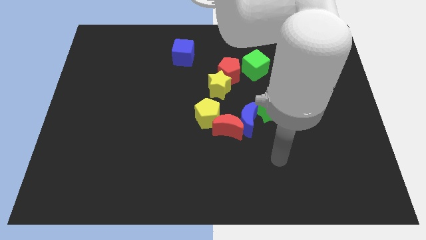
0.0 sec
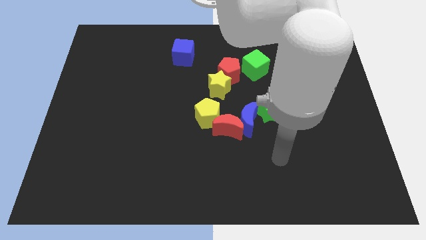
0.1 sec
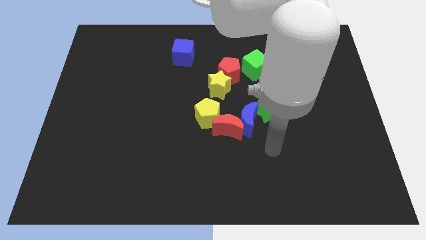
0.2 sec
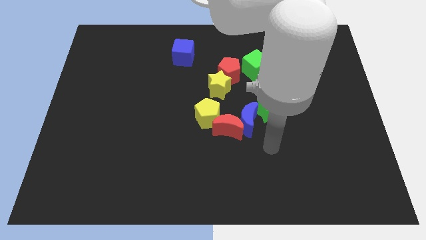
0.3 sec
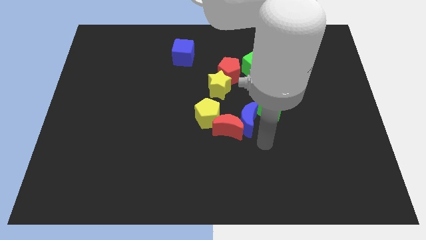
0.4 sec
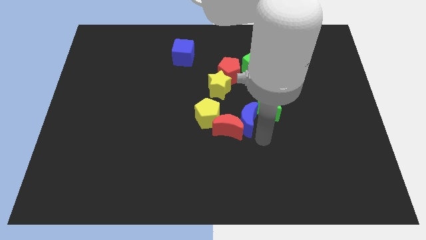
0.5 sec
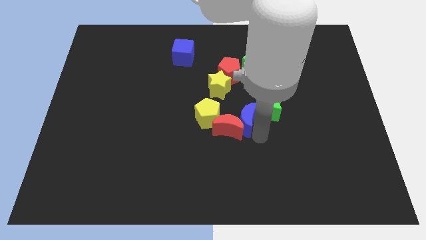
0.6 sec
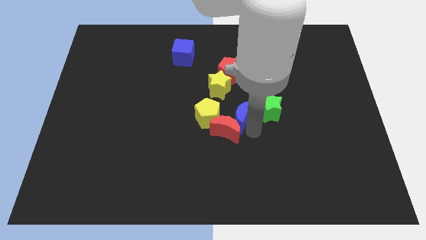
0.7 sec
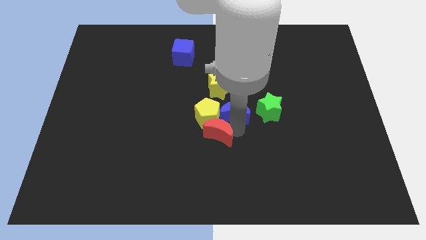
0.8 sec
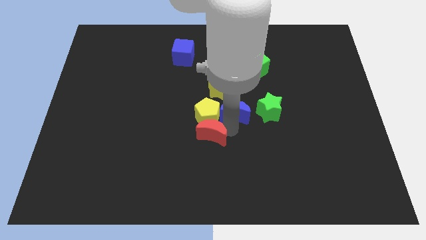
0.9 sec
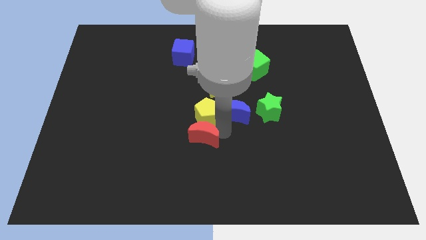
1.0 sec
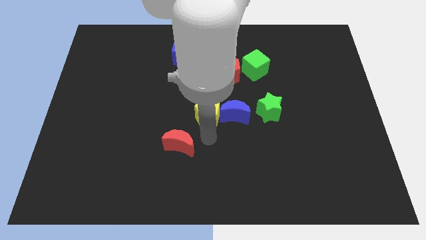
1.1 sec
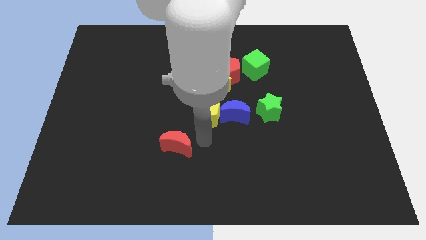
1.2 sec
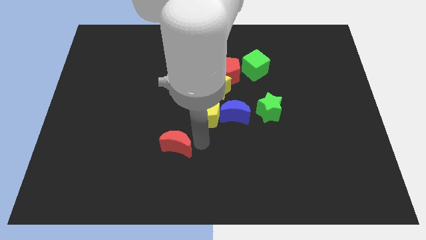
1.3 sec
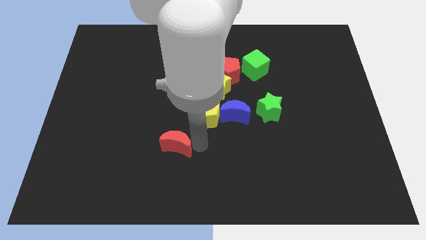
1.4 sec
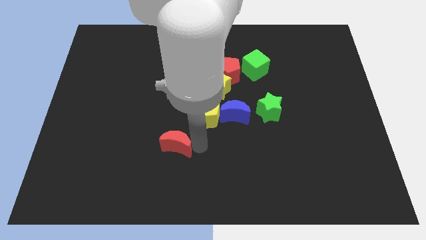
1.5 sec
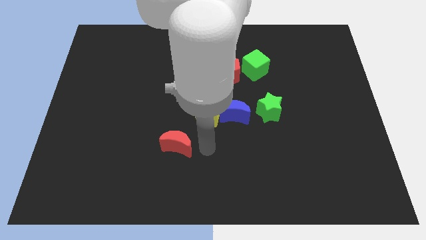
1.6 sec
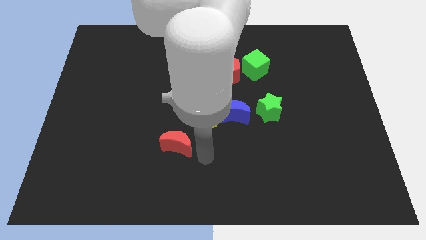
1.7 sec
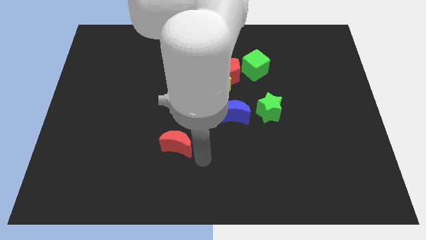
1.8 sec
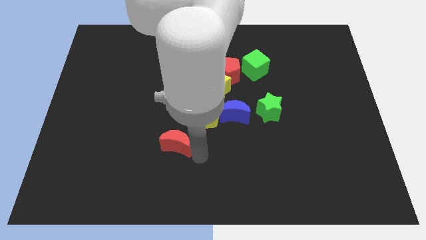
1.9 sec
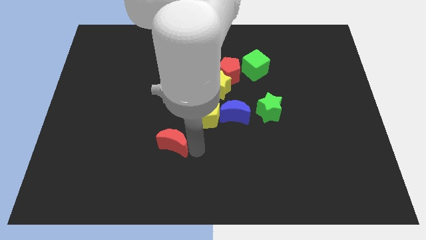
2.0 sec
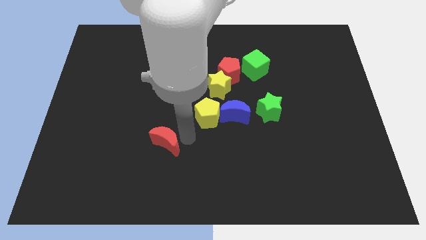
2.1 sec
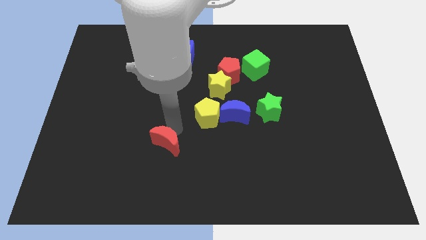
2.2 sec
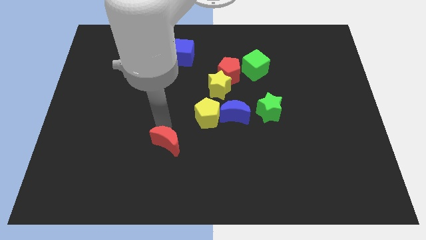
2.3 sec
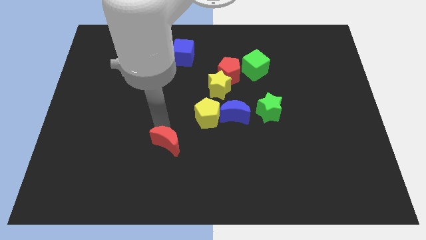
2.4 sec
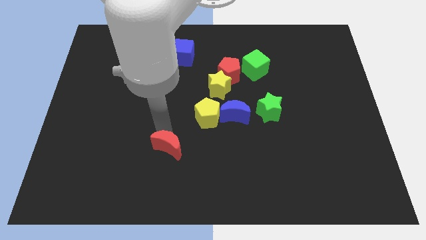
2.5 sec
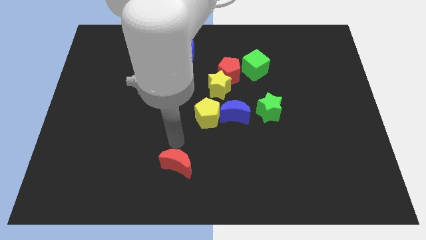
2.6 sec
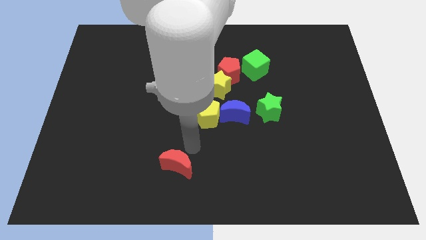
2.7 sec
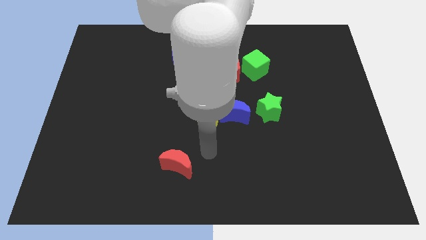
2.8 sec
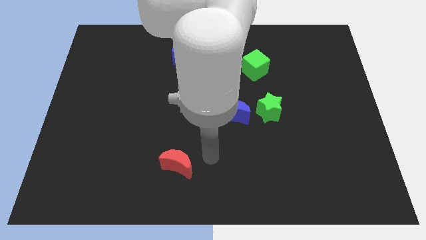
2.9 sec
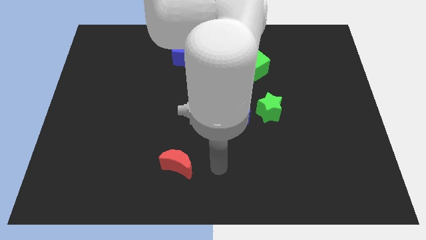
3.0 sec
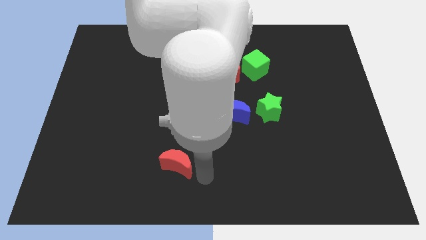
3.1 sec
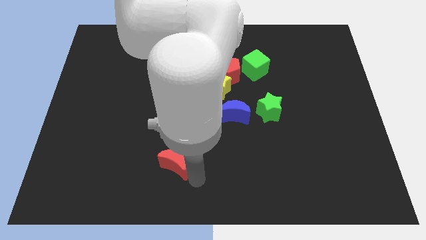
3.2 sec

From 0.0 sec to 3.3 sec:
push the red moon to the bottom side

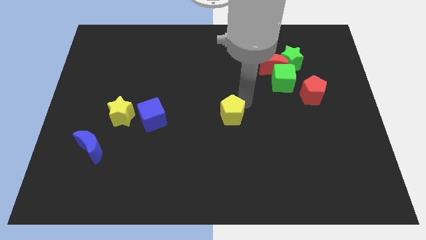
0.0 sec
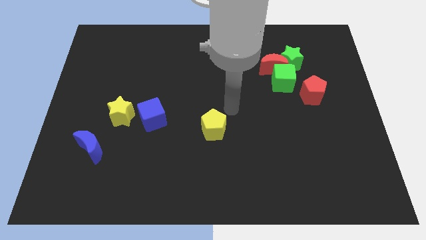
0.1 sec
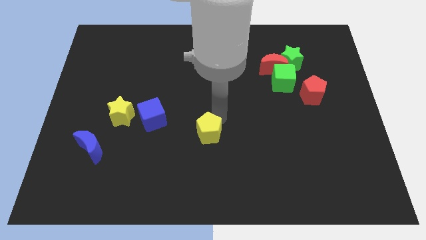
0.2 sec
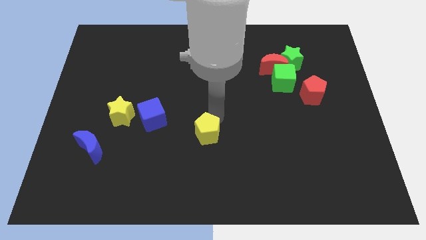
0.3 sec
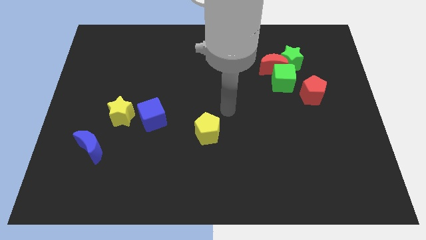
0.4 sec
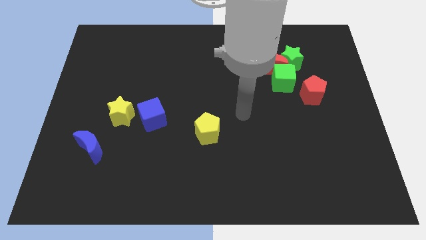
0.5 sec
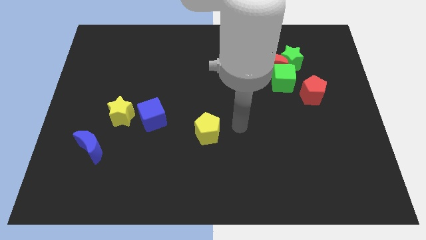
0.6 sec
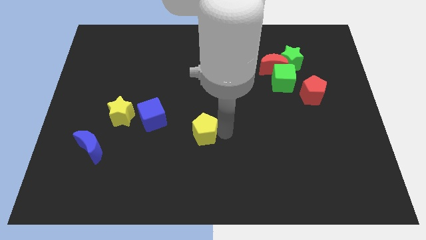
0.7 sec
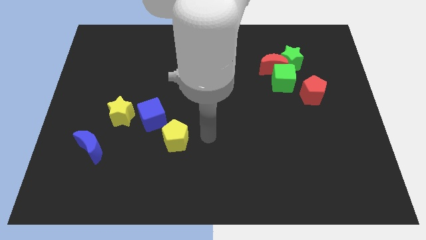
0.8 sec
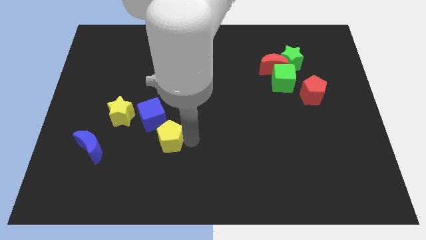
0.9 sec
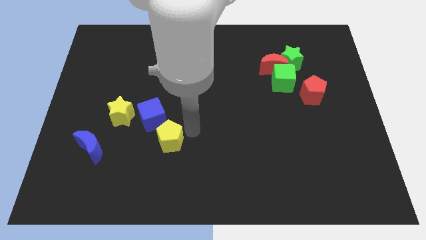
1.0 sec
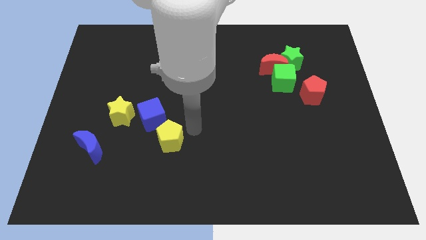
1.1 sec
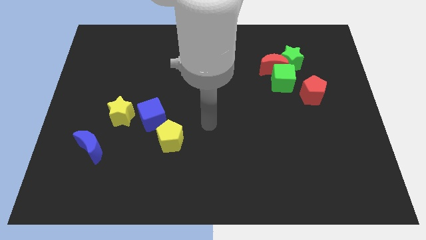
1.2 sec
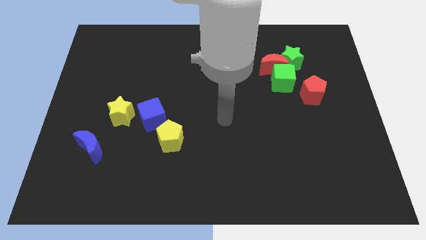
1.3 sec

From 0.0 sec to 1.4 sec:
place the yellow pentagon diagonal to the blue cube

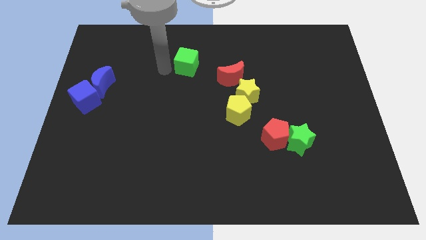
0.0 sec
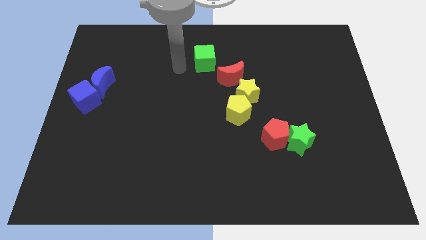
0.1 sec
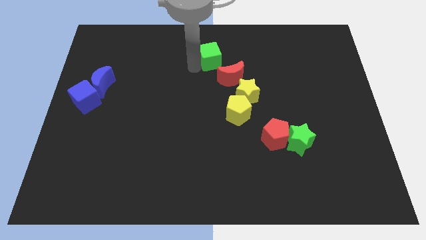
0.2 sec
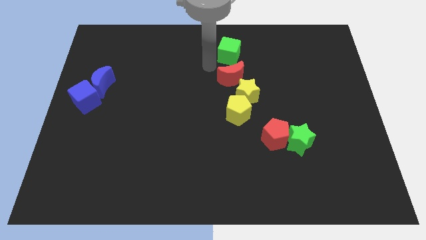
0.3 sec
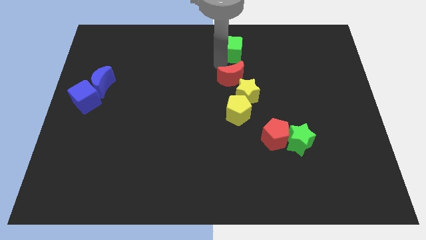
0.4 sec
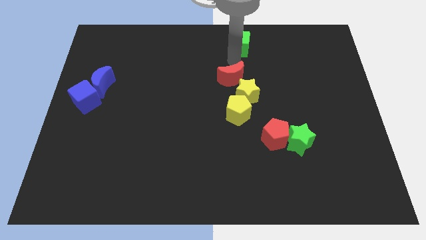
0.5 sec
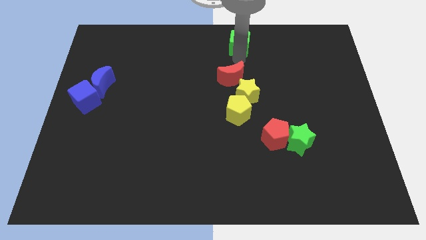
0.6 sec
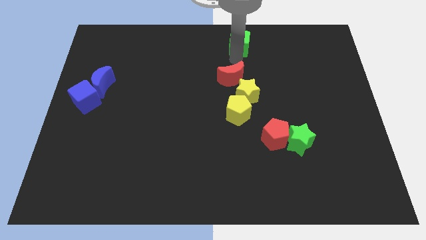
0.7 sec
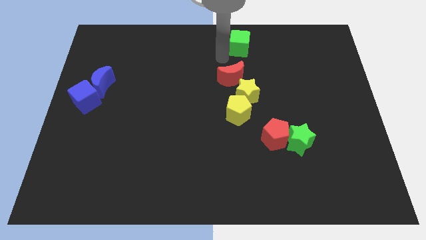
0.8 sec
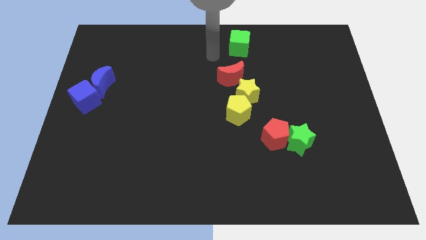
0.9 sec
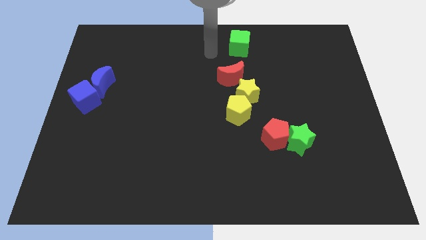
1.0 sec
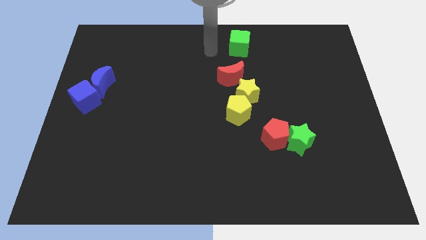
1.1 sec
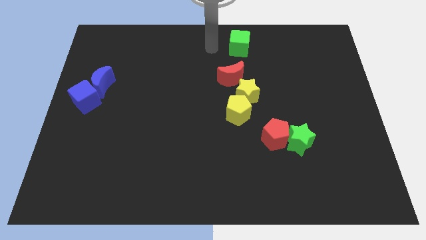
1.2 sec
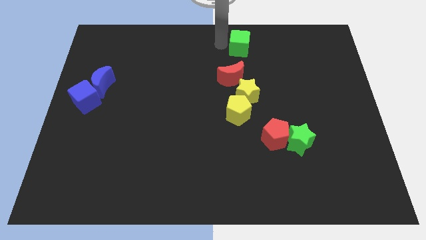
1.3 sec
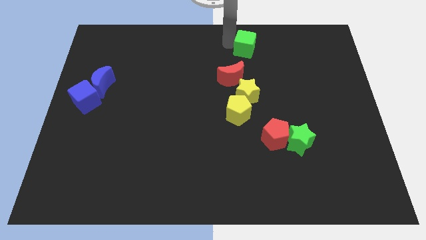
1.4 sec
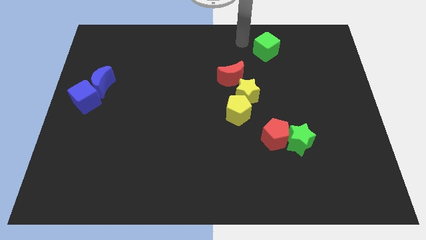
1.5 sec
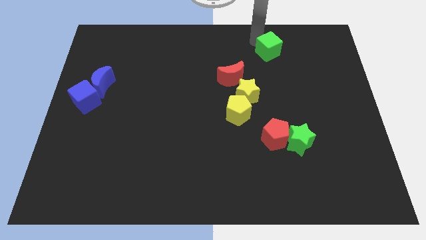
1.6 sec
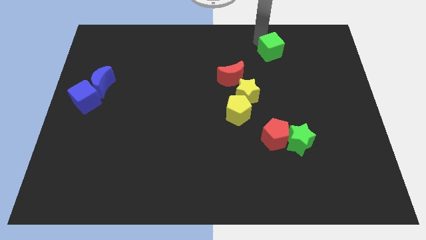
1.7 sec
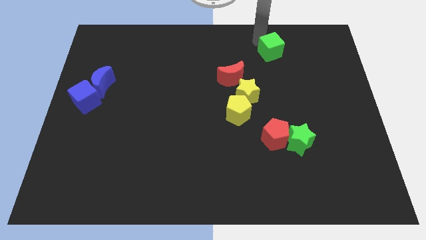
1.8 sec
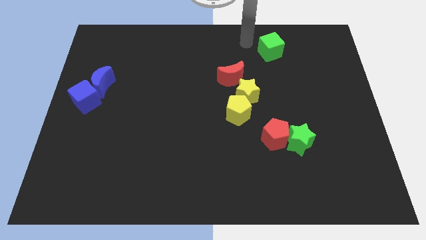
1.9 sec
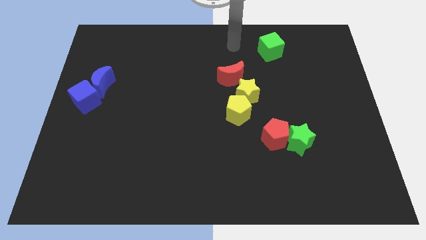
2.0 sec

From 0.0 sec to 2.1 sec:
push the green cube slightly towards the right side of the board

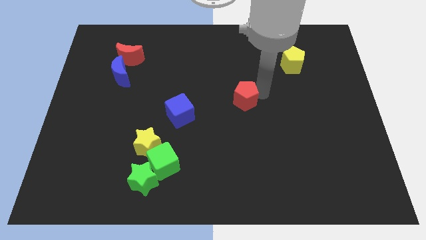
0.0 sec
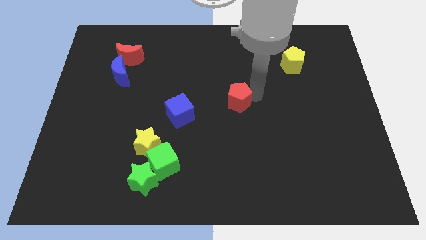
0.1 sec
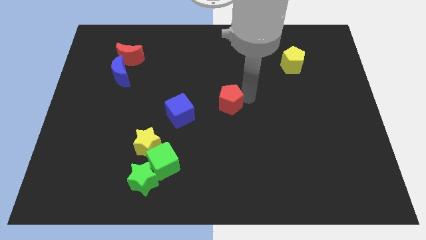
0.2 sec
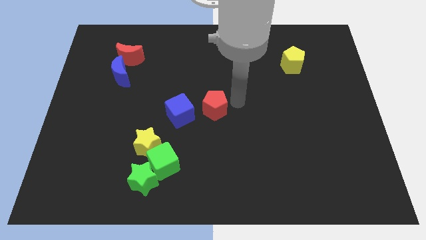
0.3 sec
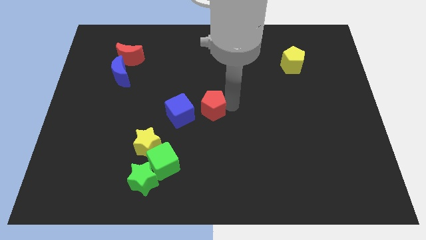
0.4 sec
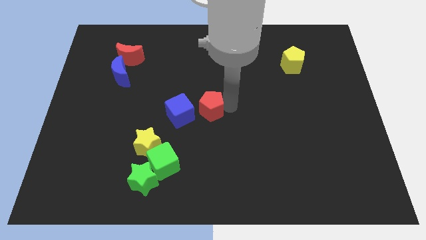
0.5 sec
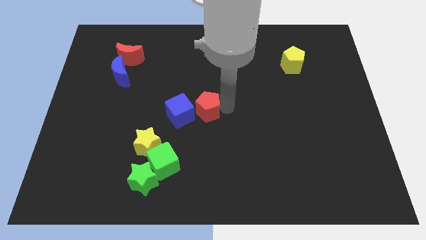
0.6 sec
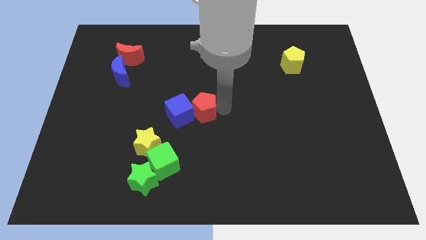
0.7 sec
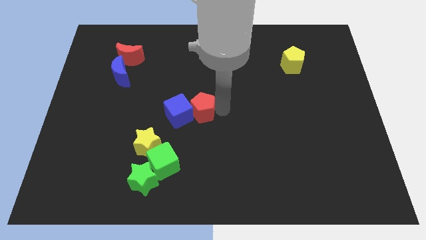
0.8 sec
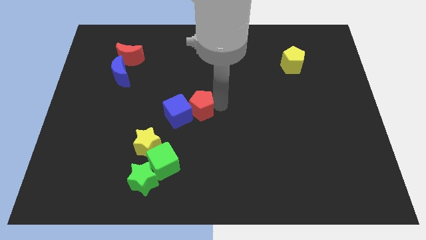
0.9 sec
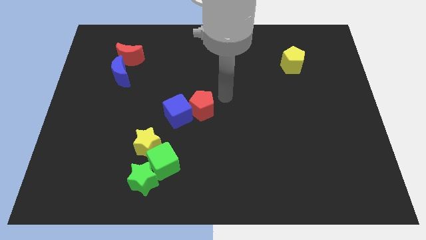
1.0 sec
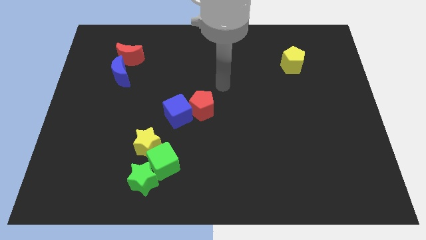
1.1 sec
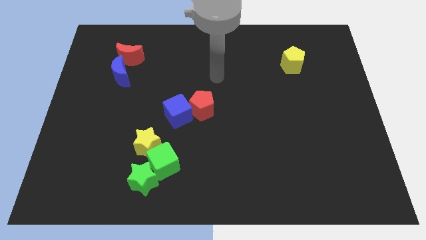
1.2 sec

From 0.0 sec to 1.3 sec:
move the red pentagon into the blue cube

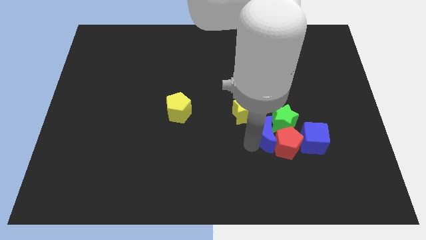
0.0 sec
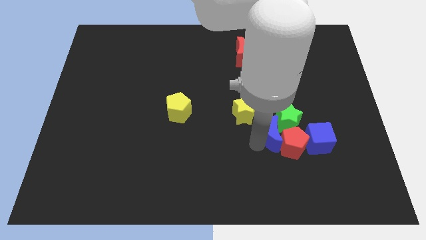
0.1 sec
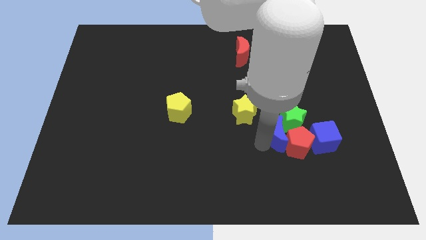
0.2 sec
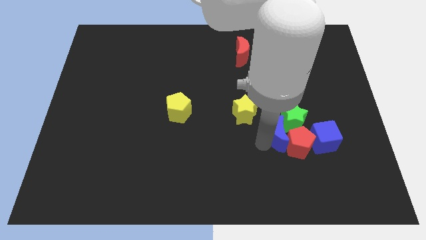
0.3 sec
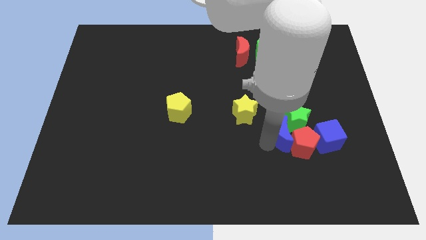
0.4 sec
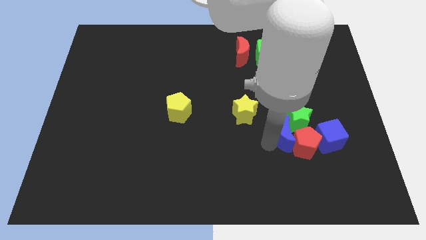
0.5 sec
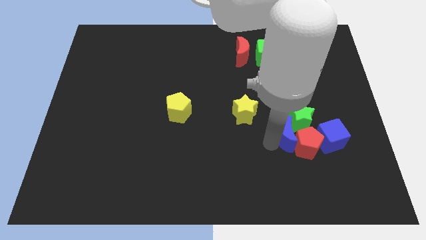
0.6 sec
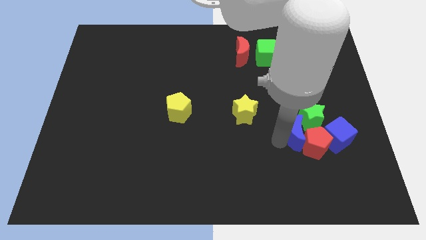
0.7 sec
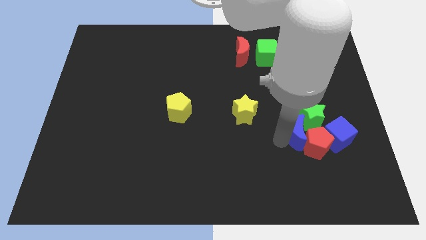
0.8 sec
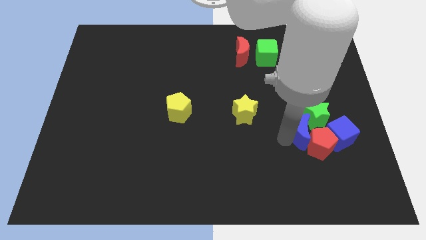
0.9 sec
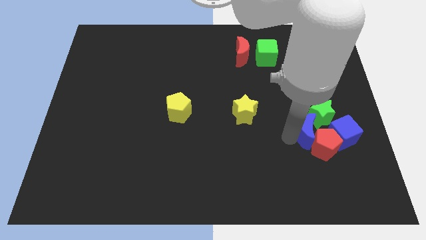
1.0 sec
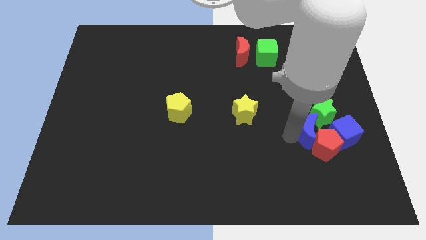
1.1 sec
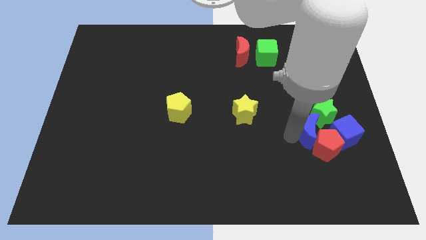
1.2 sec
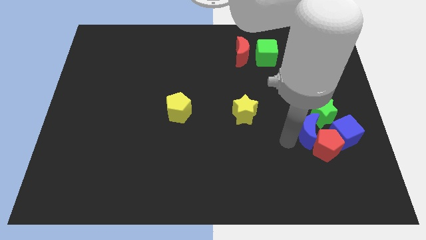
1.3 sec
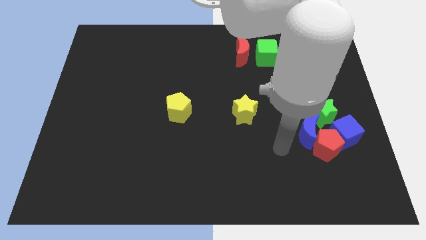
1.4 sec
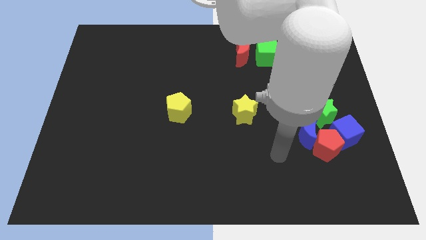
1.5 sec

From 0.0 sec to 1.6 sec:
move a group of blocks to the right side of the board
